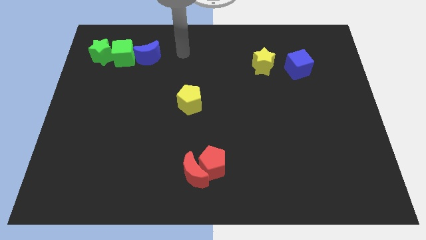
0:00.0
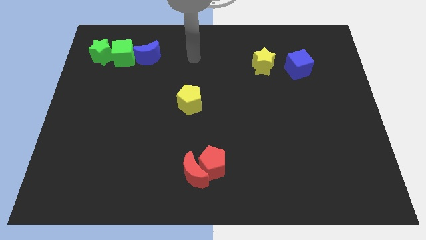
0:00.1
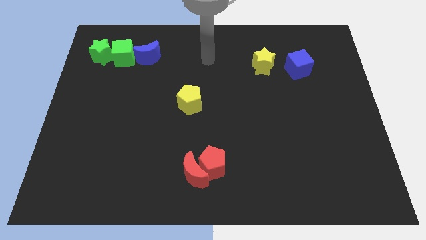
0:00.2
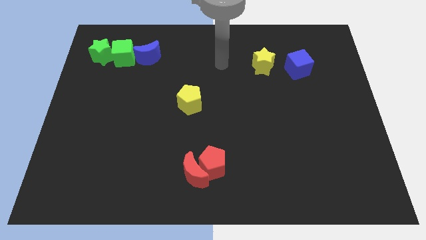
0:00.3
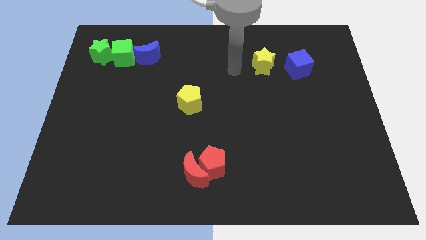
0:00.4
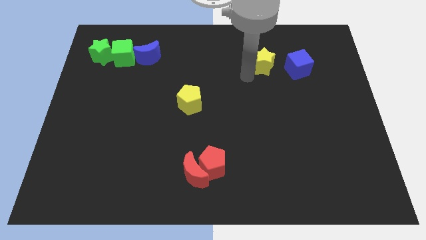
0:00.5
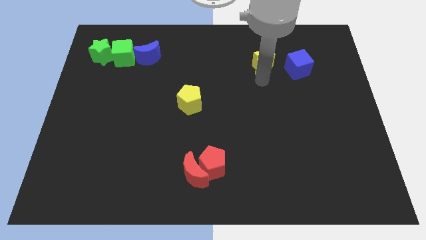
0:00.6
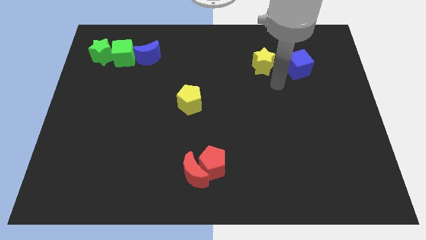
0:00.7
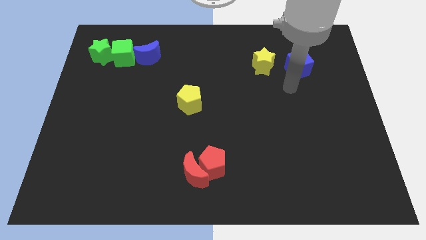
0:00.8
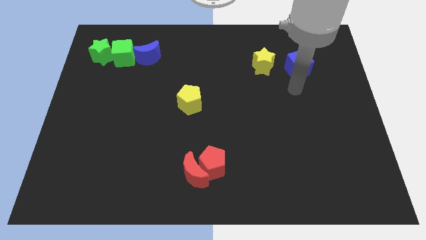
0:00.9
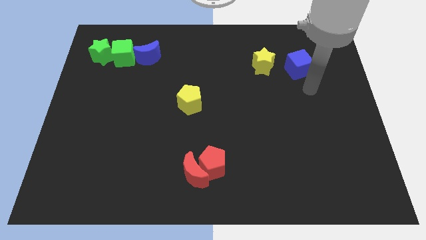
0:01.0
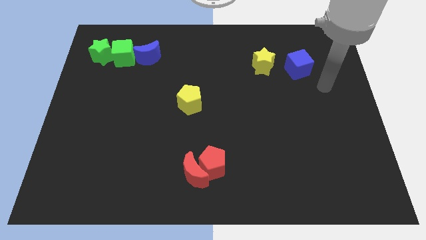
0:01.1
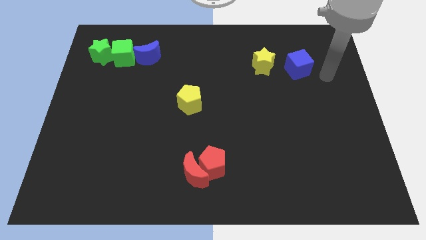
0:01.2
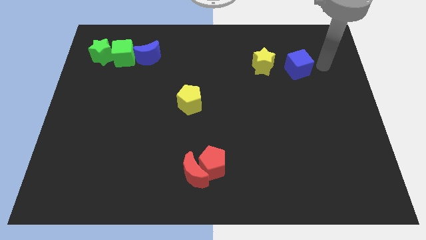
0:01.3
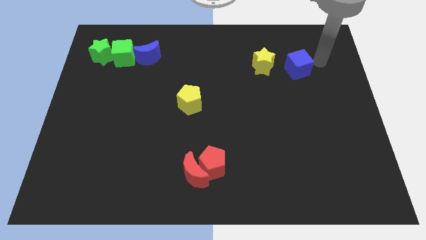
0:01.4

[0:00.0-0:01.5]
place your arm to the right of blue cube

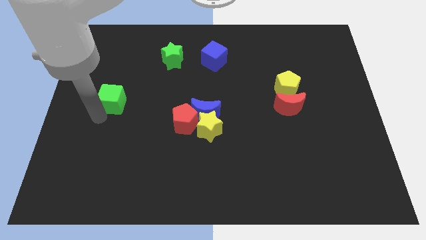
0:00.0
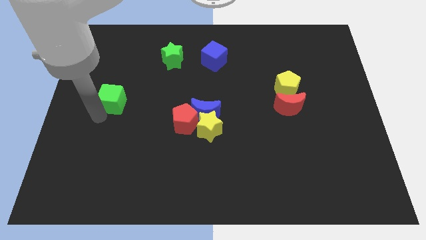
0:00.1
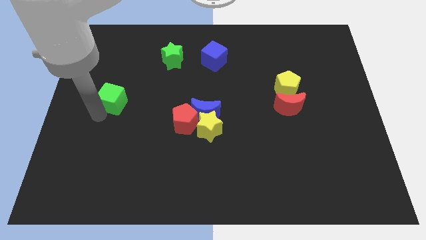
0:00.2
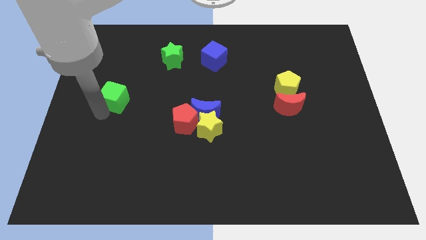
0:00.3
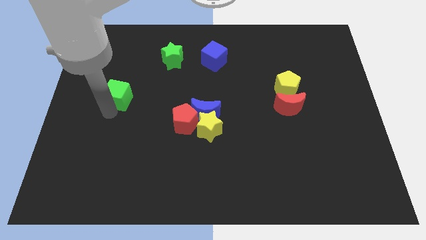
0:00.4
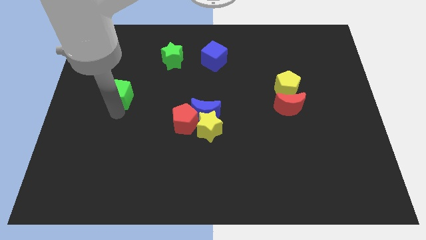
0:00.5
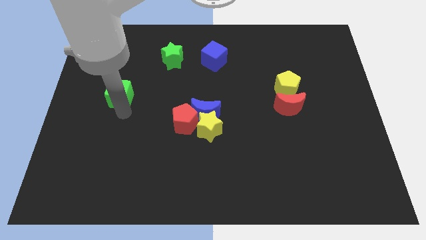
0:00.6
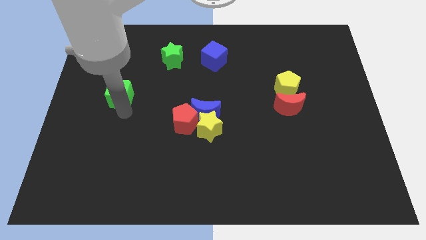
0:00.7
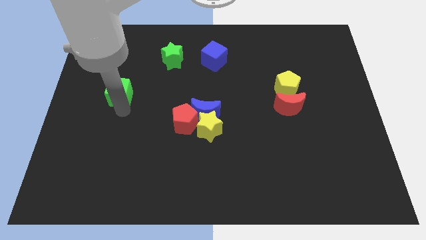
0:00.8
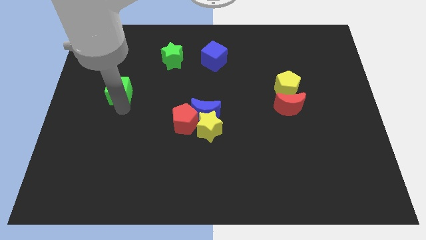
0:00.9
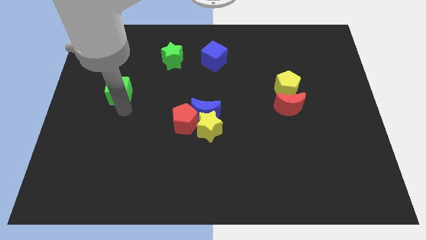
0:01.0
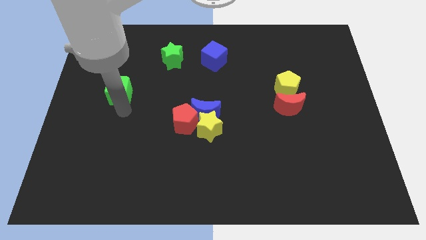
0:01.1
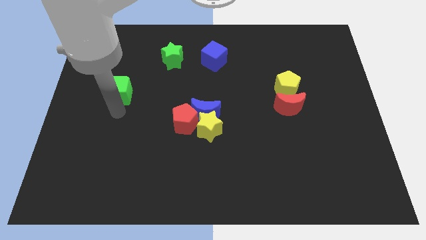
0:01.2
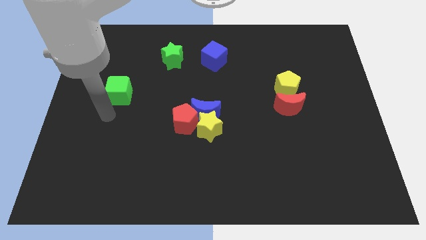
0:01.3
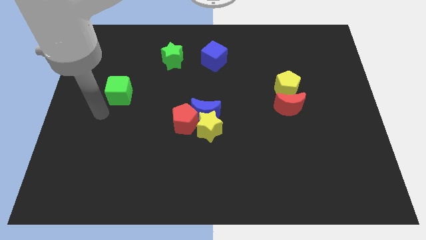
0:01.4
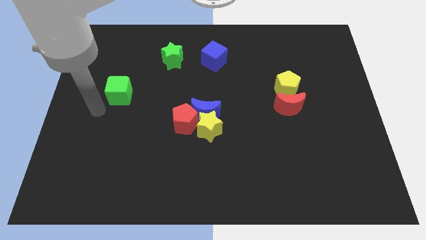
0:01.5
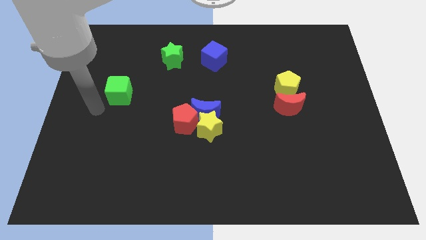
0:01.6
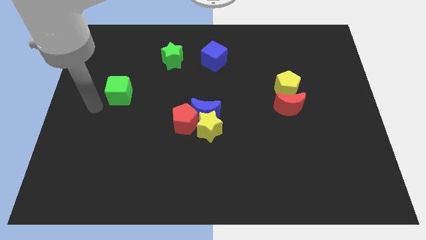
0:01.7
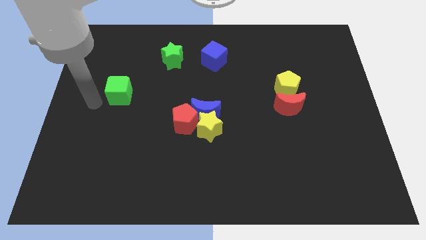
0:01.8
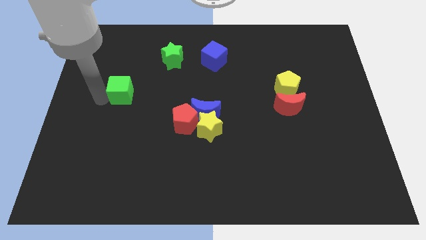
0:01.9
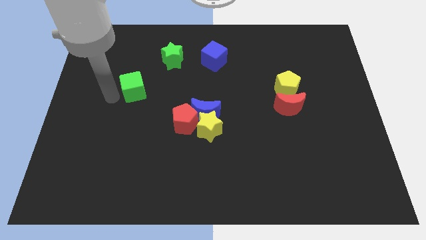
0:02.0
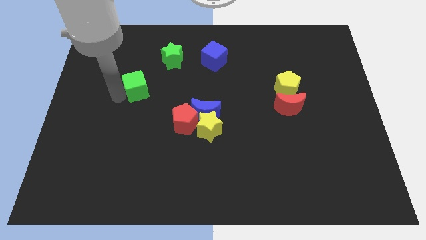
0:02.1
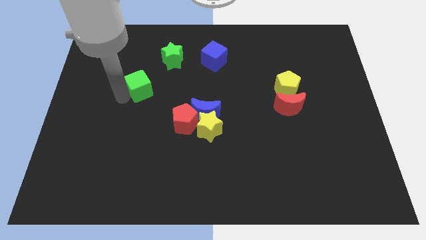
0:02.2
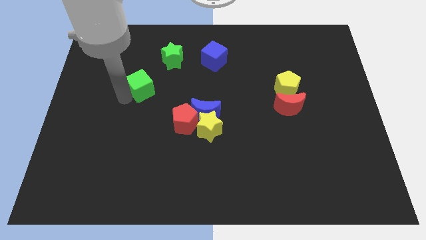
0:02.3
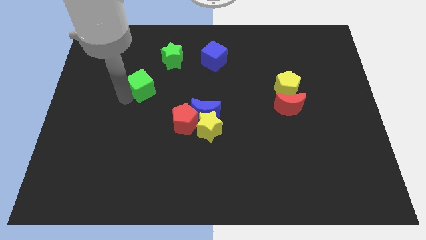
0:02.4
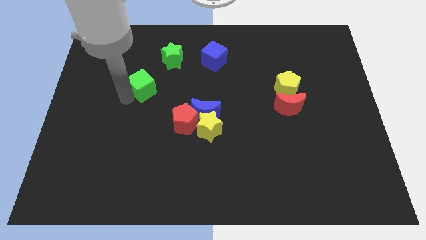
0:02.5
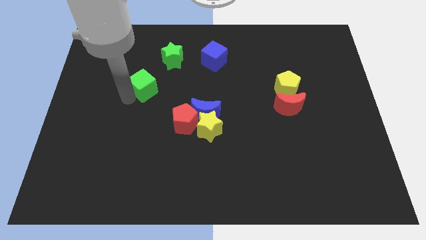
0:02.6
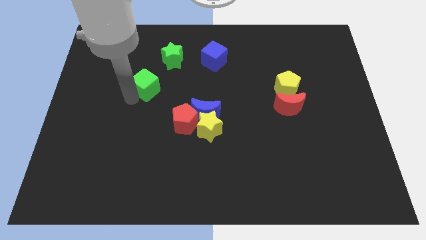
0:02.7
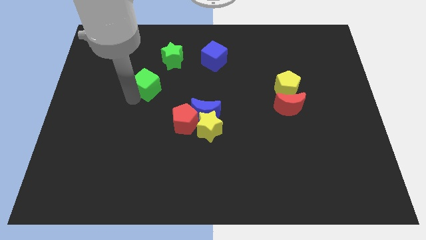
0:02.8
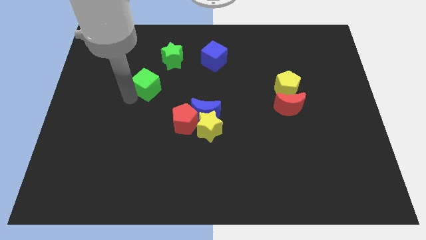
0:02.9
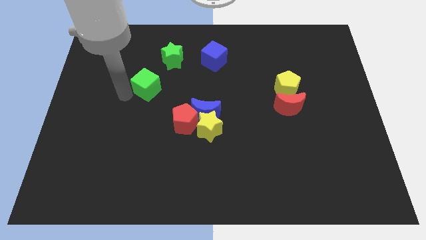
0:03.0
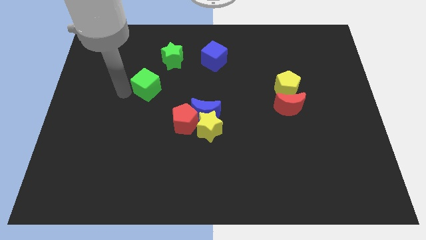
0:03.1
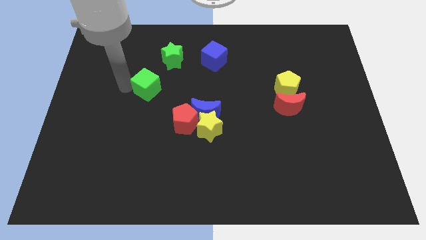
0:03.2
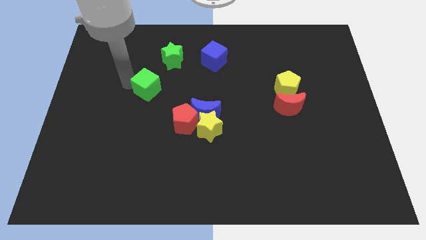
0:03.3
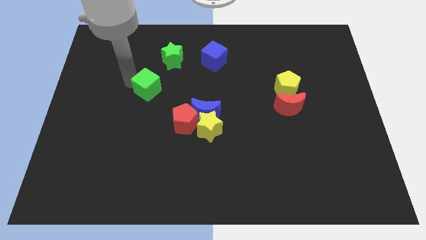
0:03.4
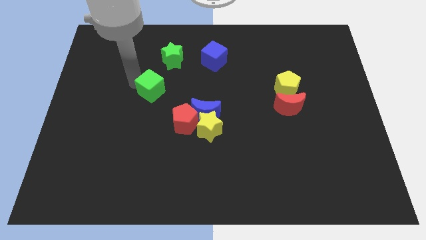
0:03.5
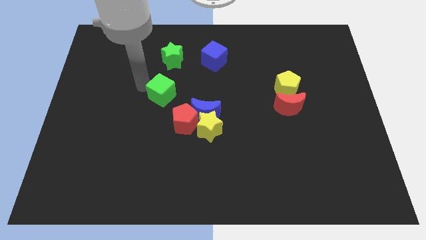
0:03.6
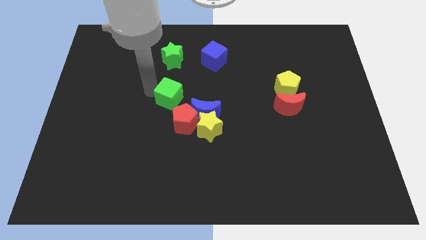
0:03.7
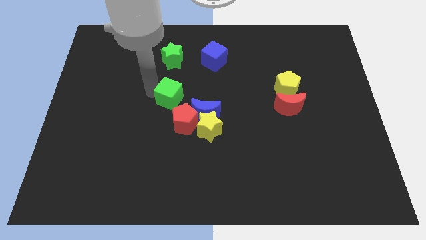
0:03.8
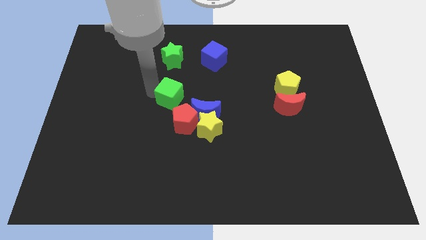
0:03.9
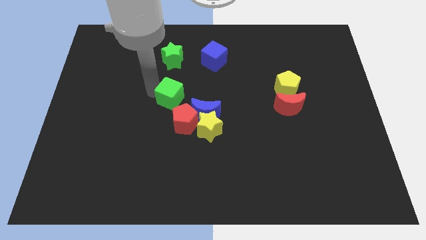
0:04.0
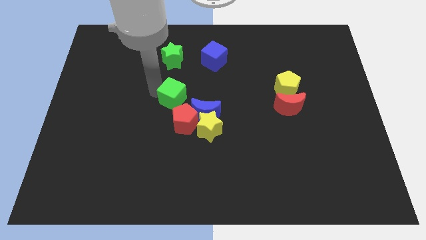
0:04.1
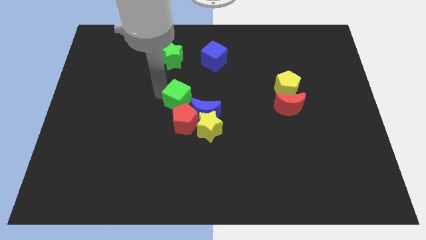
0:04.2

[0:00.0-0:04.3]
push the green cube to the top of the red pentagon

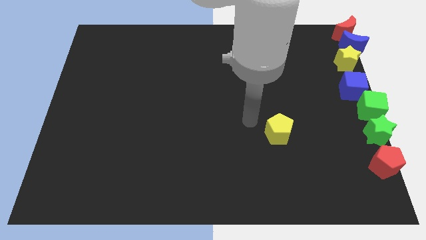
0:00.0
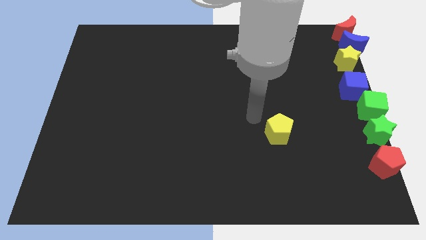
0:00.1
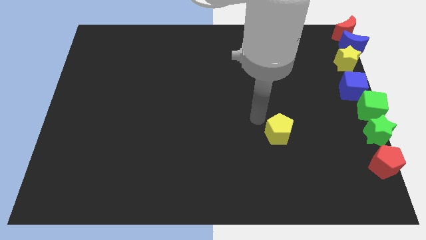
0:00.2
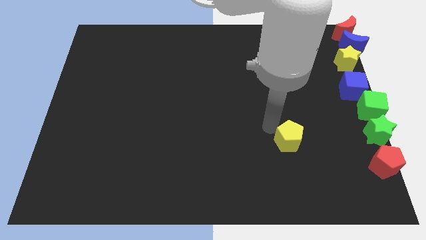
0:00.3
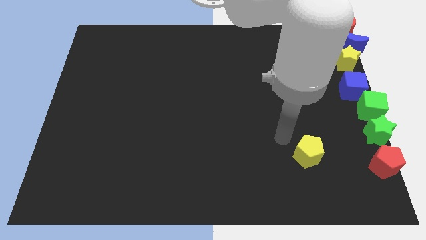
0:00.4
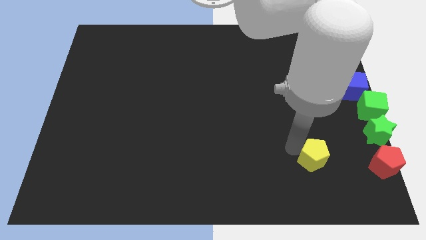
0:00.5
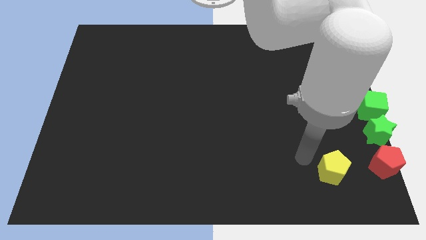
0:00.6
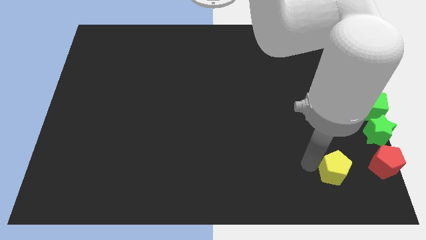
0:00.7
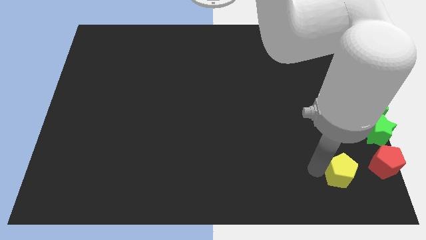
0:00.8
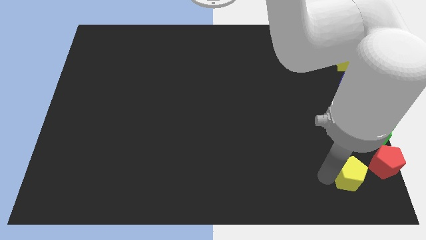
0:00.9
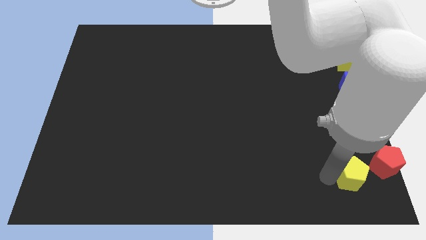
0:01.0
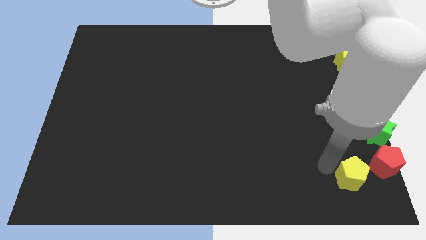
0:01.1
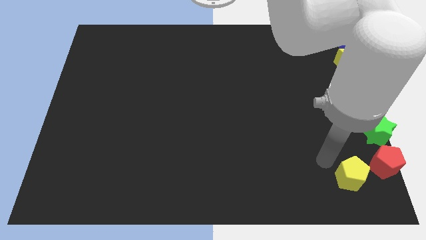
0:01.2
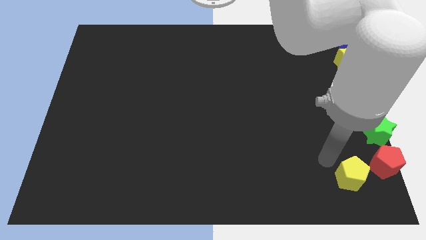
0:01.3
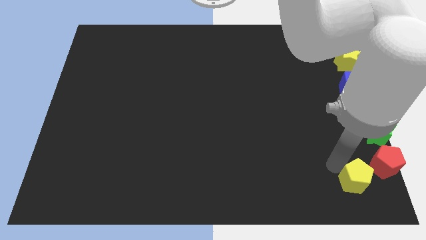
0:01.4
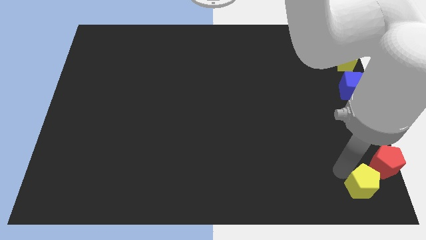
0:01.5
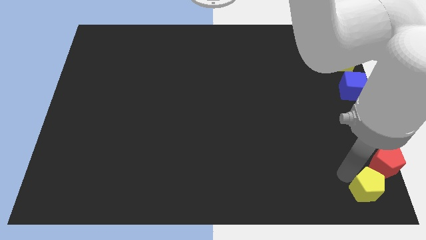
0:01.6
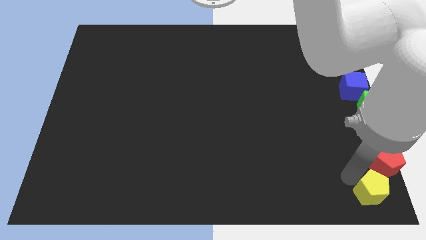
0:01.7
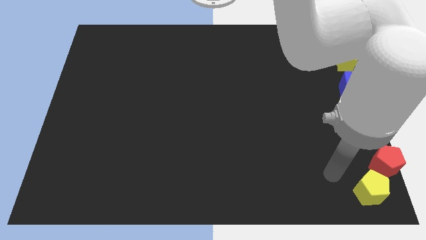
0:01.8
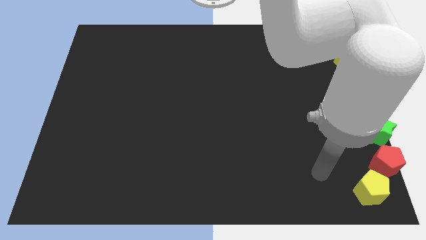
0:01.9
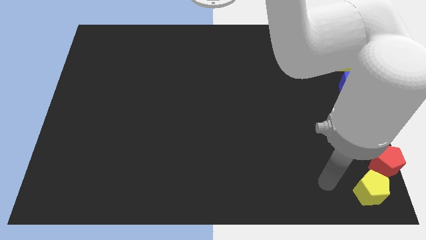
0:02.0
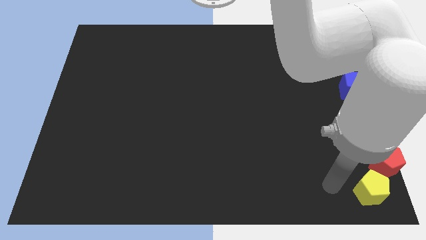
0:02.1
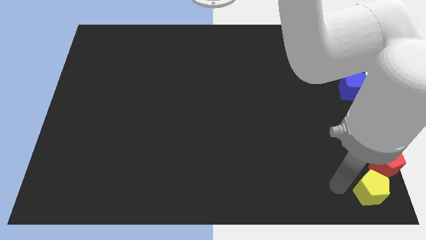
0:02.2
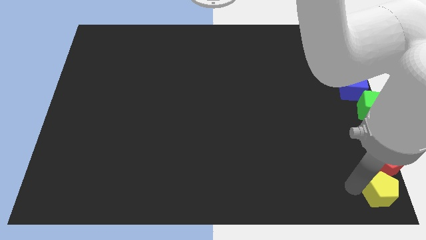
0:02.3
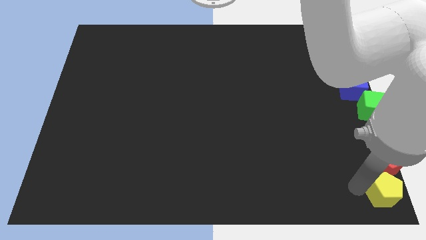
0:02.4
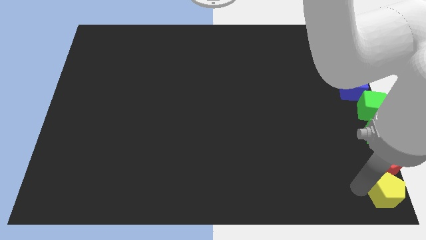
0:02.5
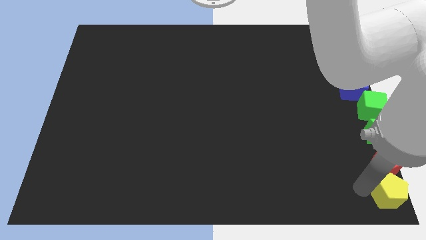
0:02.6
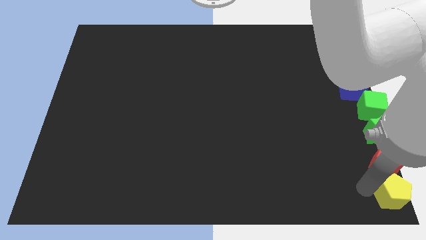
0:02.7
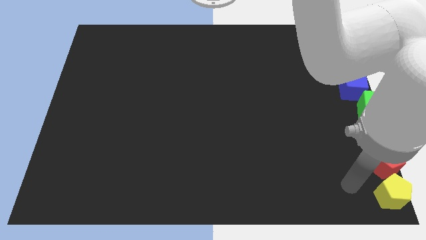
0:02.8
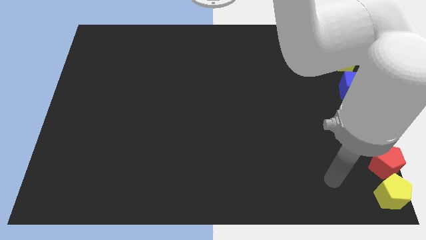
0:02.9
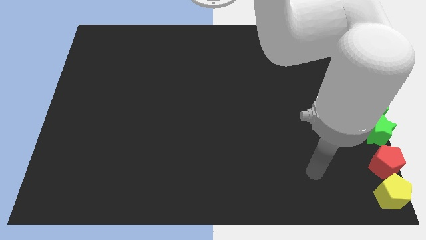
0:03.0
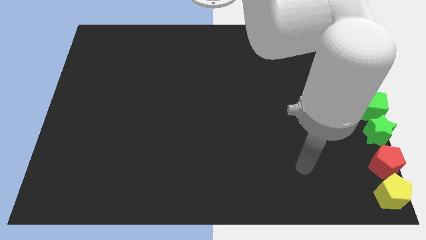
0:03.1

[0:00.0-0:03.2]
place yellow pentagon below red pentagon

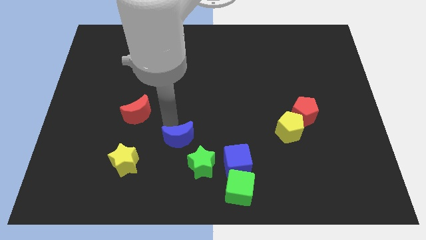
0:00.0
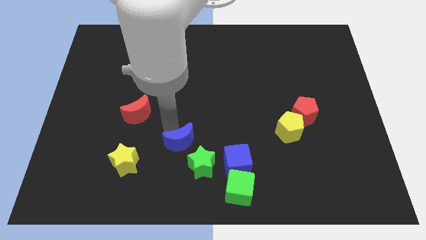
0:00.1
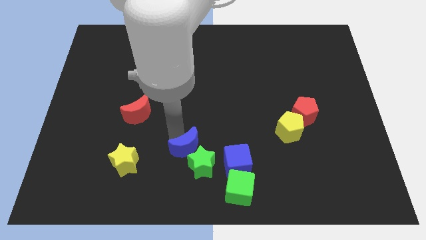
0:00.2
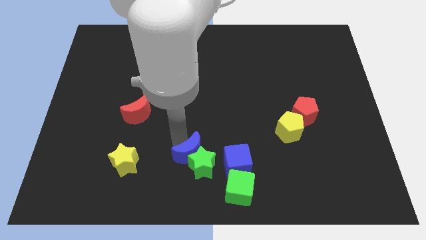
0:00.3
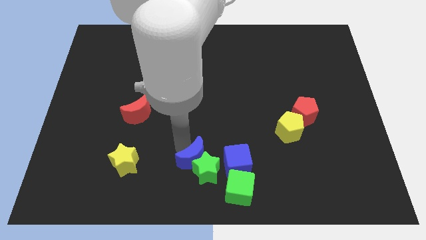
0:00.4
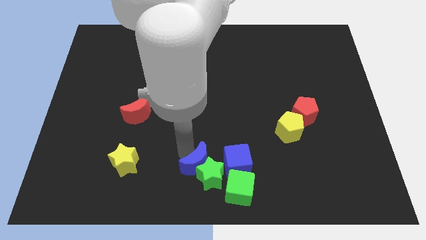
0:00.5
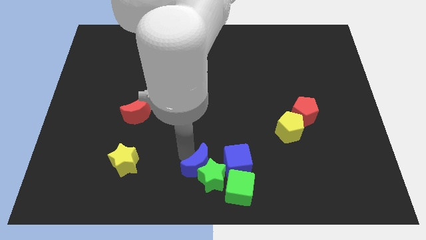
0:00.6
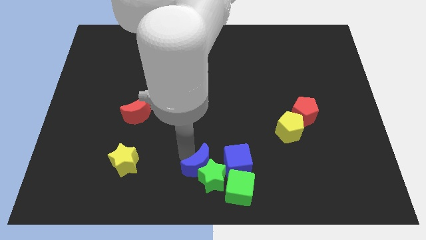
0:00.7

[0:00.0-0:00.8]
push the blue crescent above the green star
